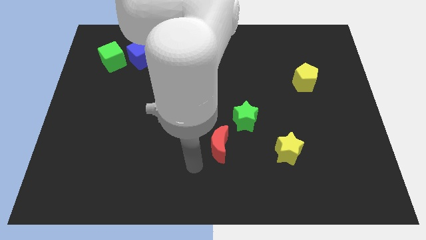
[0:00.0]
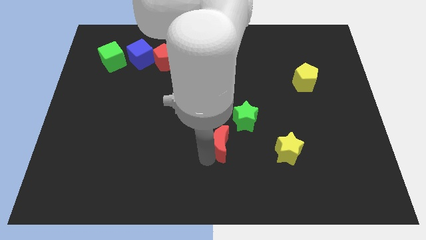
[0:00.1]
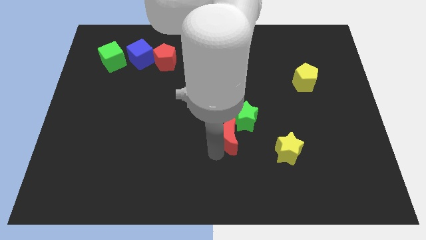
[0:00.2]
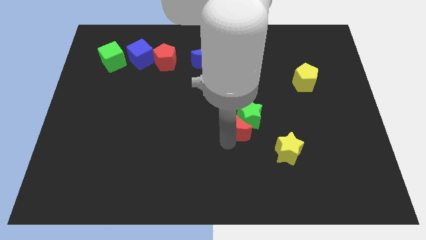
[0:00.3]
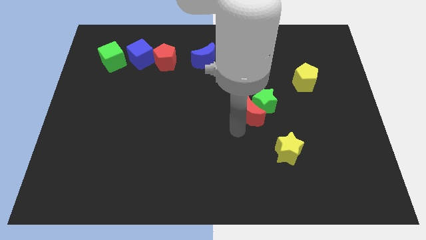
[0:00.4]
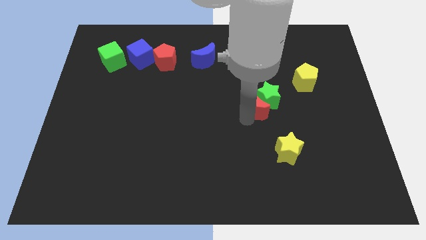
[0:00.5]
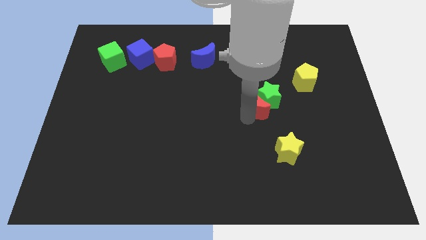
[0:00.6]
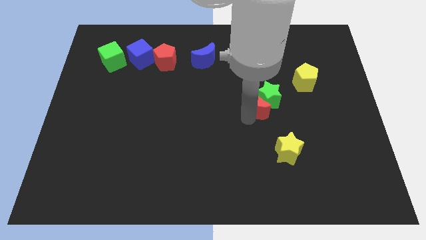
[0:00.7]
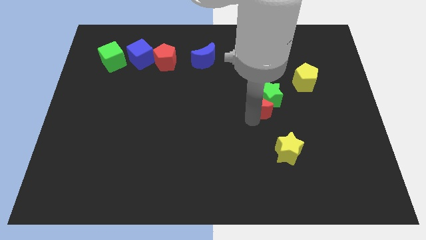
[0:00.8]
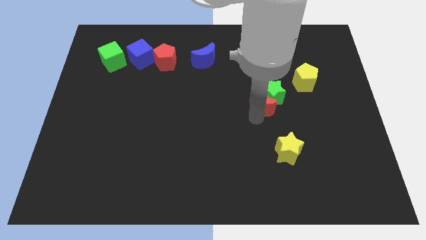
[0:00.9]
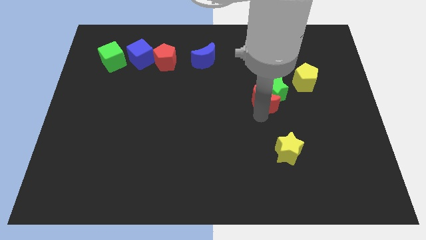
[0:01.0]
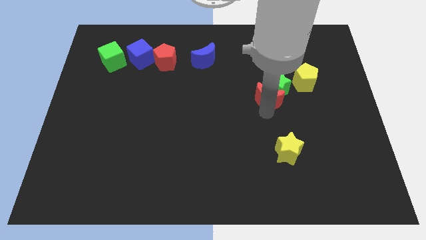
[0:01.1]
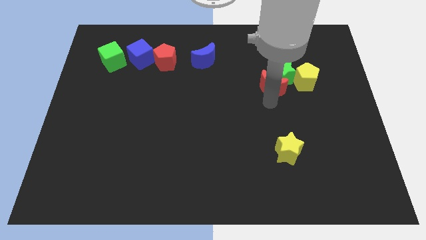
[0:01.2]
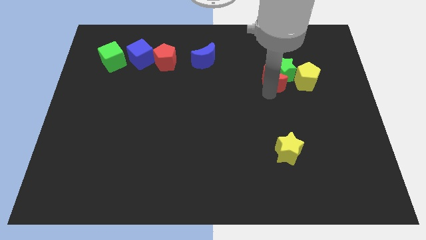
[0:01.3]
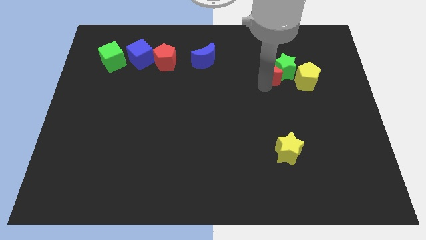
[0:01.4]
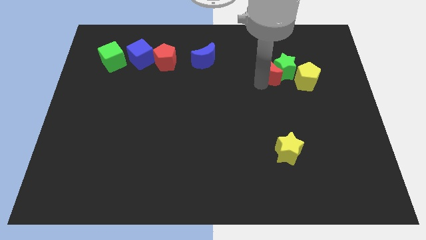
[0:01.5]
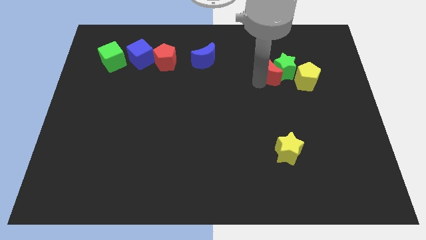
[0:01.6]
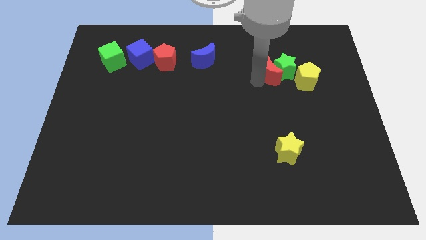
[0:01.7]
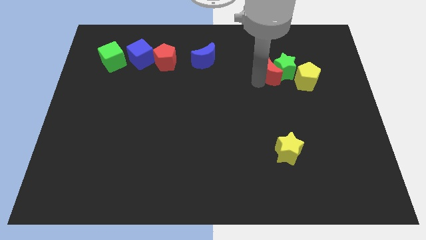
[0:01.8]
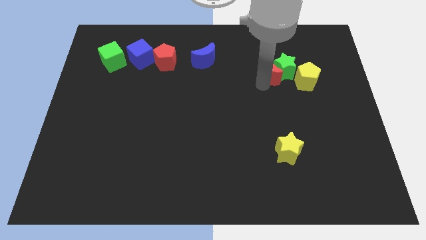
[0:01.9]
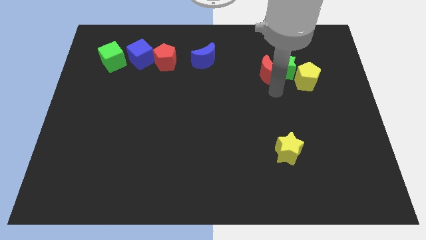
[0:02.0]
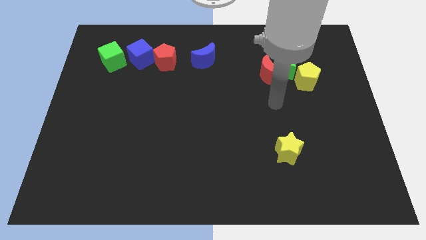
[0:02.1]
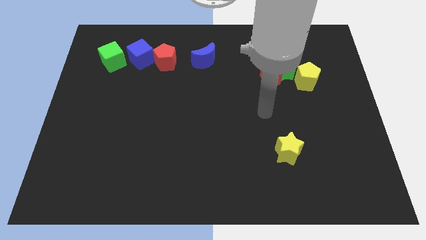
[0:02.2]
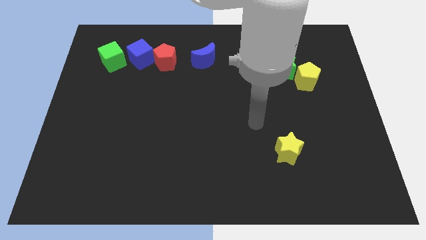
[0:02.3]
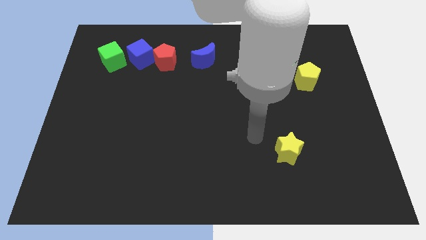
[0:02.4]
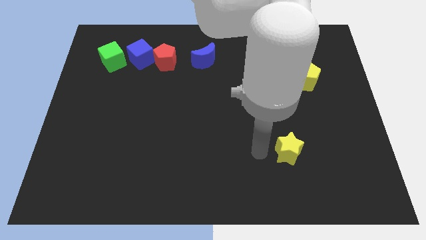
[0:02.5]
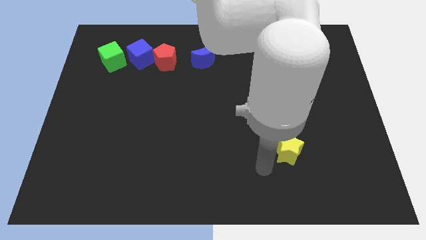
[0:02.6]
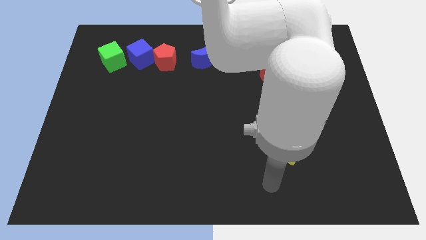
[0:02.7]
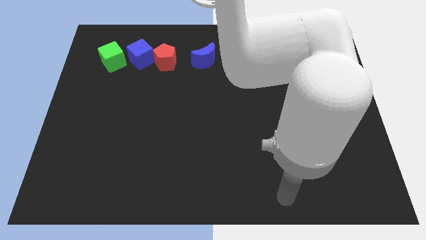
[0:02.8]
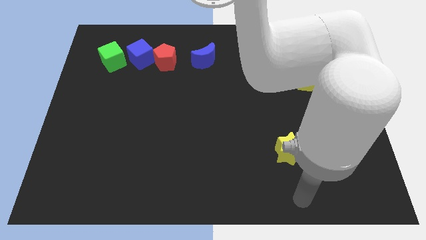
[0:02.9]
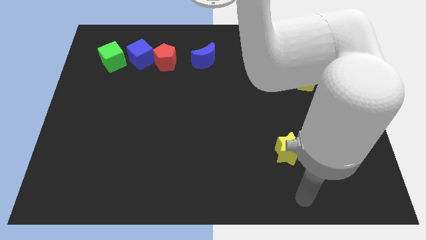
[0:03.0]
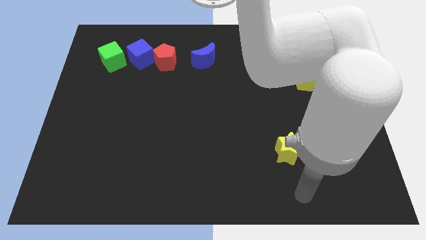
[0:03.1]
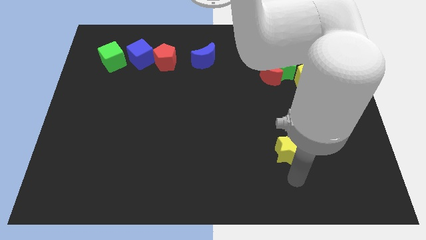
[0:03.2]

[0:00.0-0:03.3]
push the red moon and green star close to the yellow pentagon

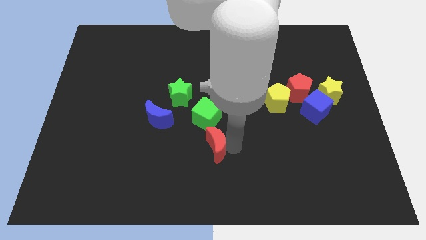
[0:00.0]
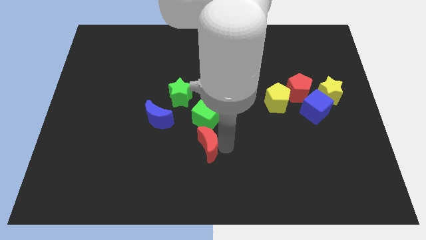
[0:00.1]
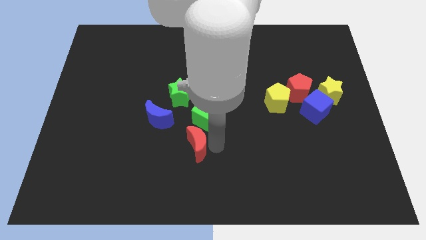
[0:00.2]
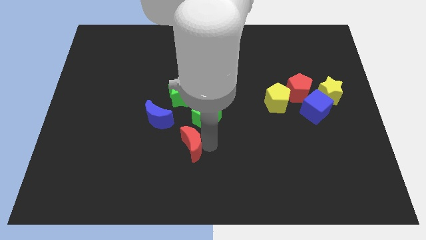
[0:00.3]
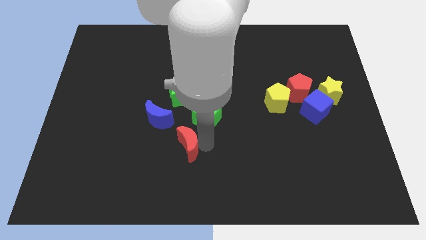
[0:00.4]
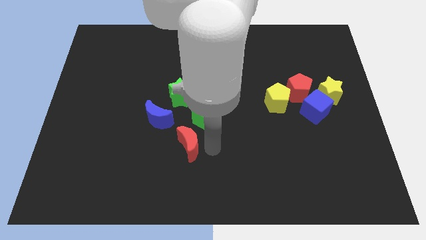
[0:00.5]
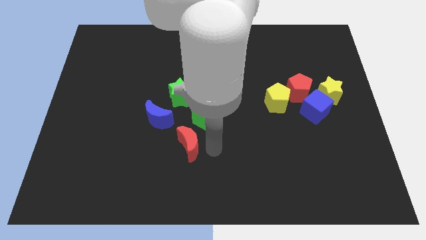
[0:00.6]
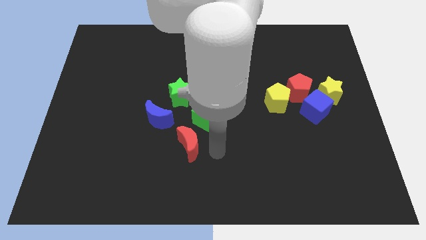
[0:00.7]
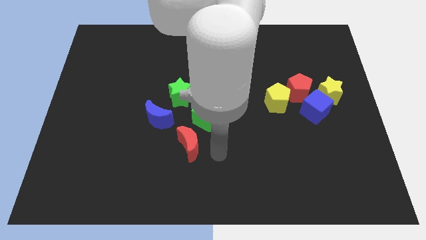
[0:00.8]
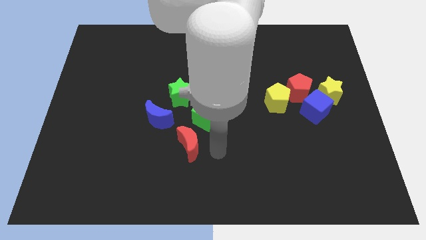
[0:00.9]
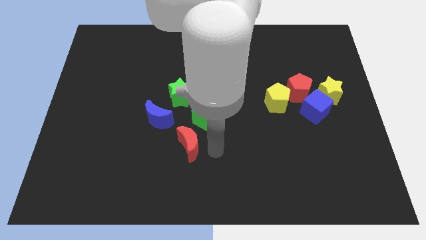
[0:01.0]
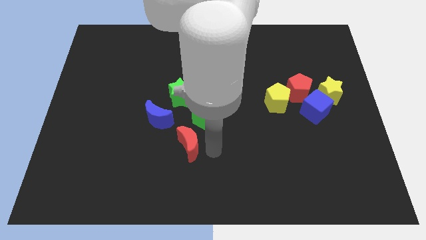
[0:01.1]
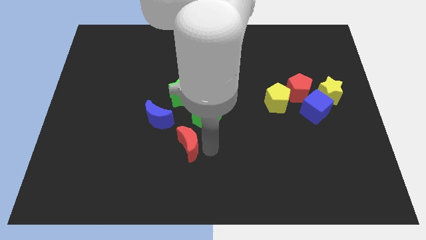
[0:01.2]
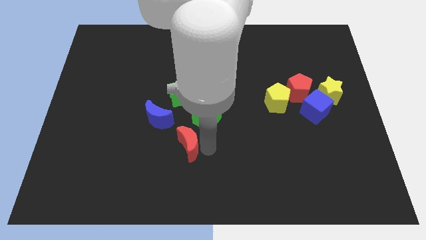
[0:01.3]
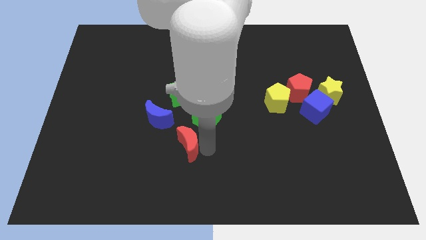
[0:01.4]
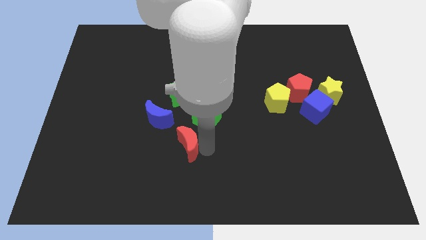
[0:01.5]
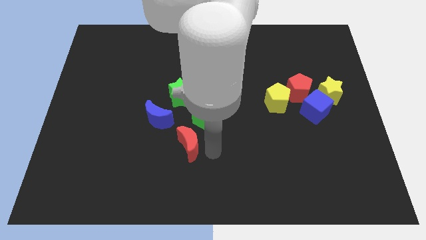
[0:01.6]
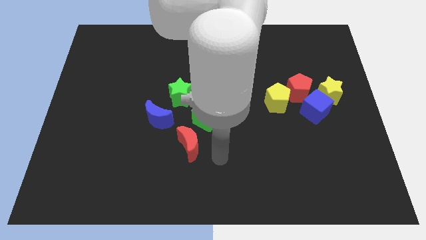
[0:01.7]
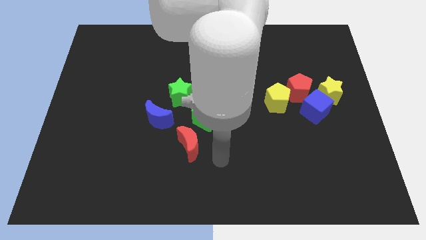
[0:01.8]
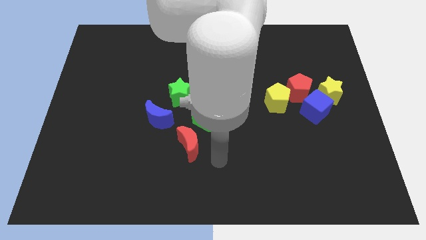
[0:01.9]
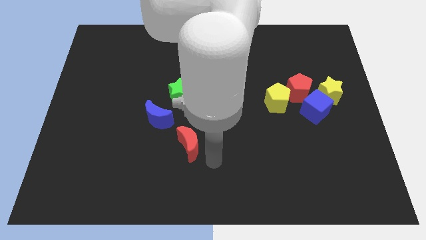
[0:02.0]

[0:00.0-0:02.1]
place the red moon to the bottom left of the green star

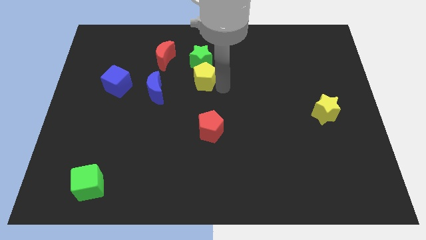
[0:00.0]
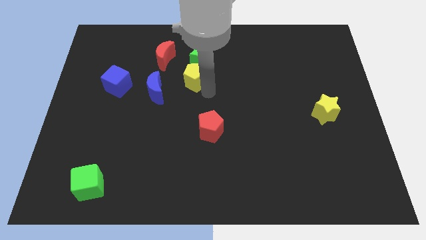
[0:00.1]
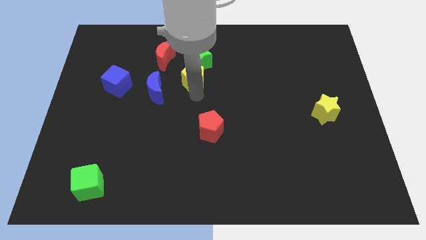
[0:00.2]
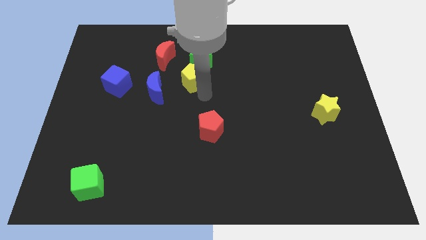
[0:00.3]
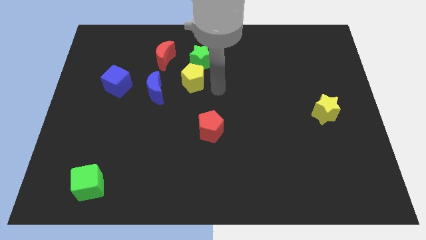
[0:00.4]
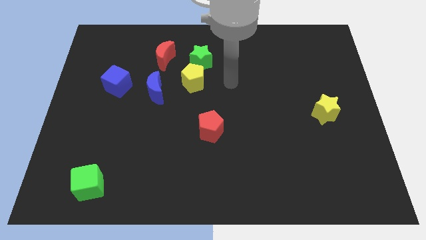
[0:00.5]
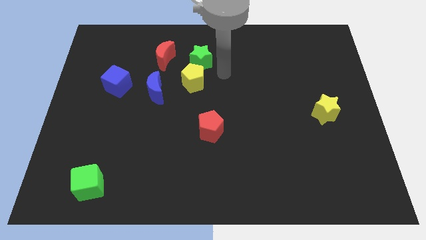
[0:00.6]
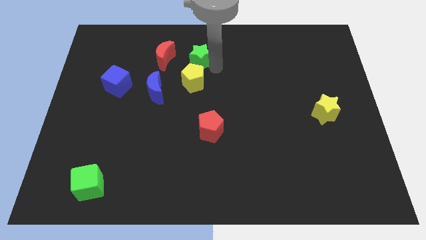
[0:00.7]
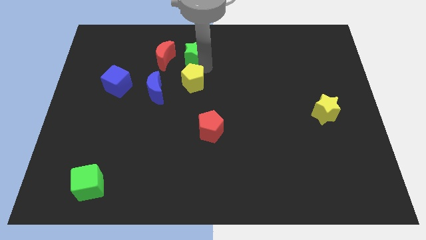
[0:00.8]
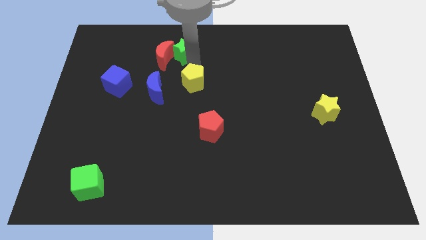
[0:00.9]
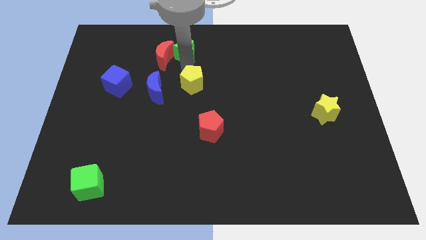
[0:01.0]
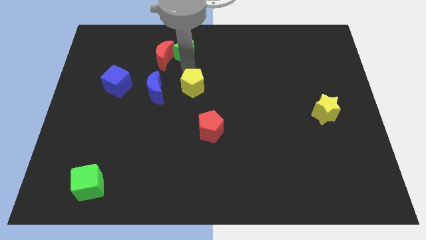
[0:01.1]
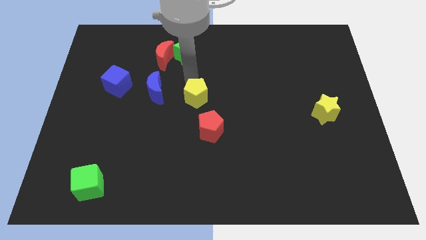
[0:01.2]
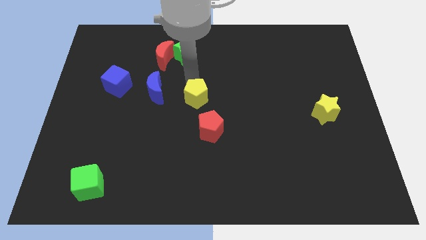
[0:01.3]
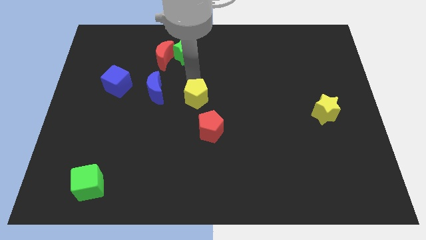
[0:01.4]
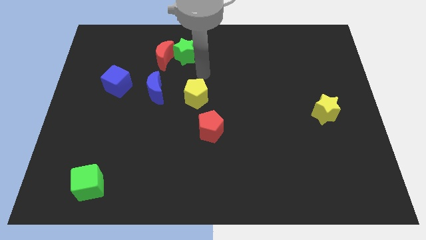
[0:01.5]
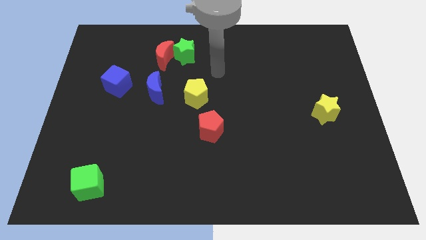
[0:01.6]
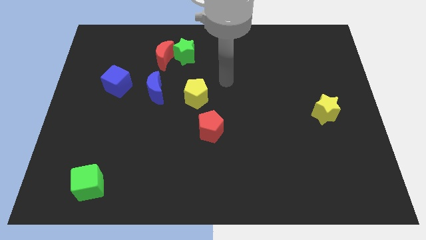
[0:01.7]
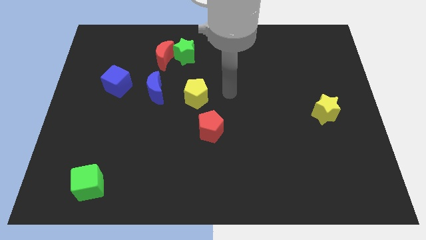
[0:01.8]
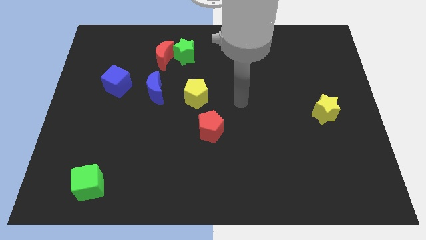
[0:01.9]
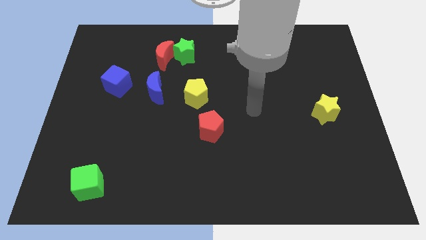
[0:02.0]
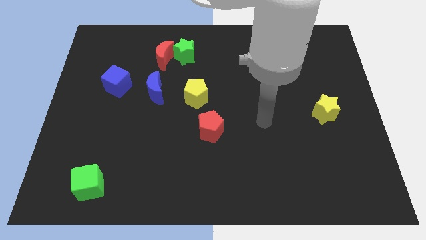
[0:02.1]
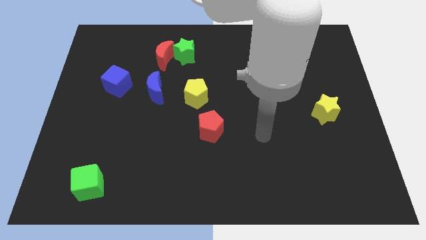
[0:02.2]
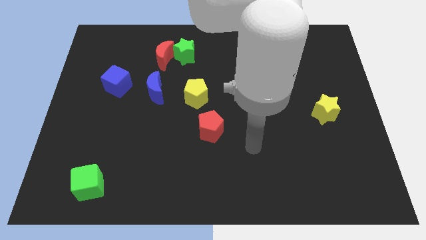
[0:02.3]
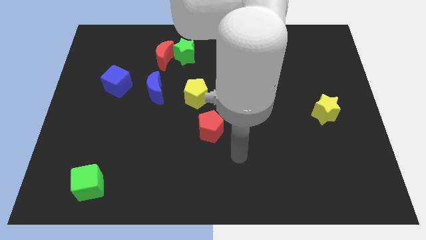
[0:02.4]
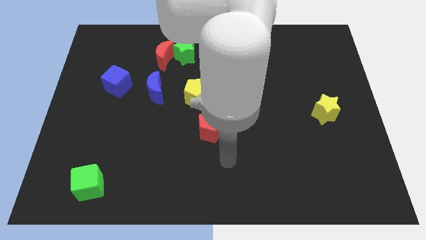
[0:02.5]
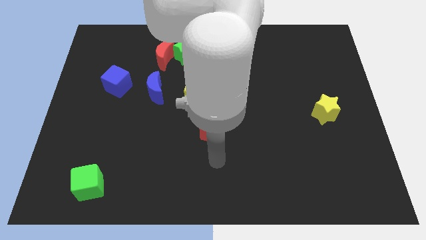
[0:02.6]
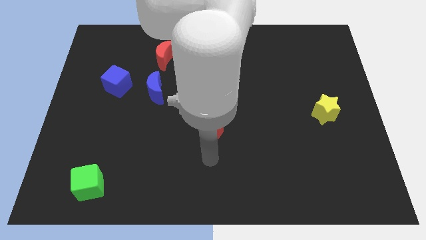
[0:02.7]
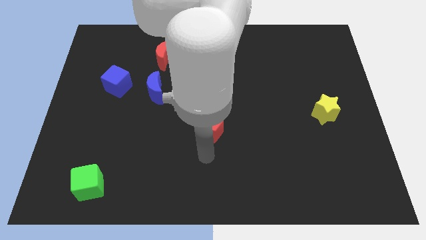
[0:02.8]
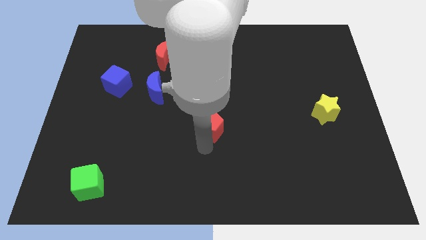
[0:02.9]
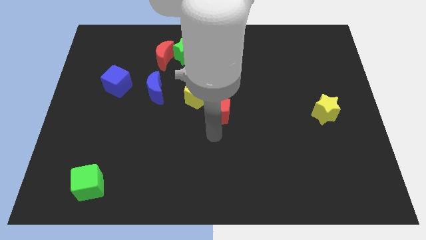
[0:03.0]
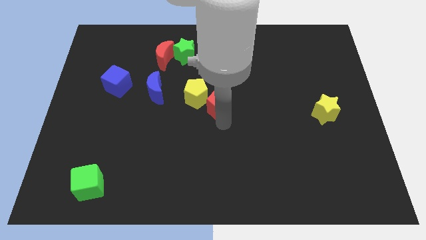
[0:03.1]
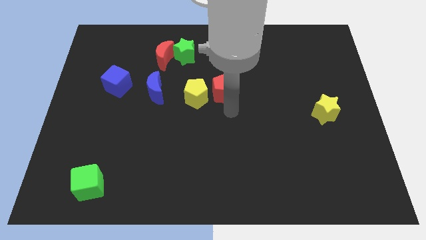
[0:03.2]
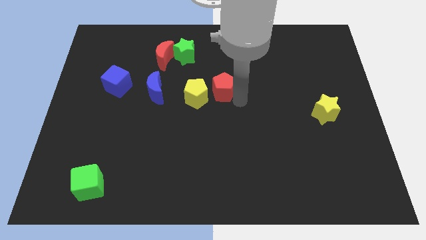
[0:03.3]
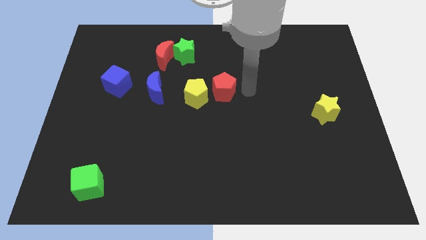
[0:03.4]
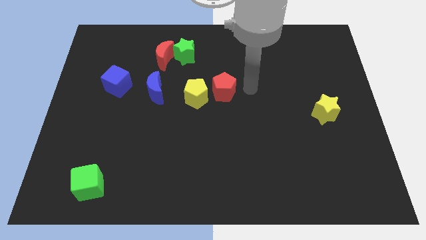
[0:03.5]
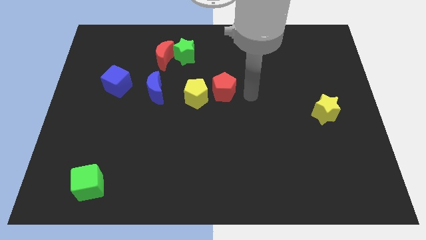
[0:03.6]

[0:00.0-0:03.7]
place the red pentagon to the right of the yellow pentagon
